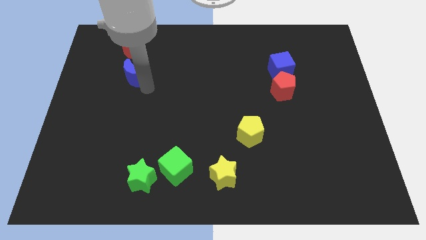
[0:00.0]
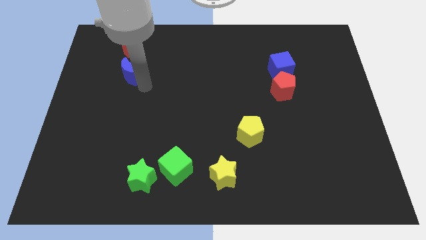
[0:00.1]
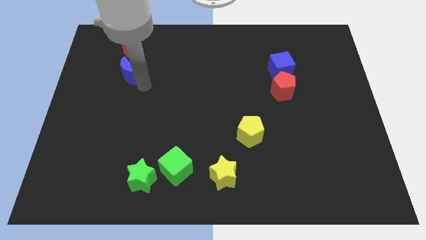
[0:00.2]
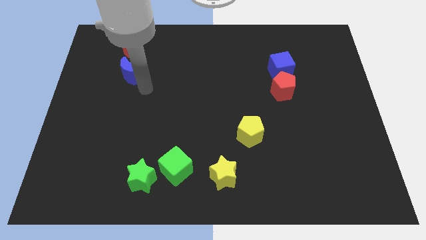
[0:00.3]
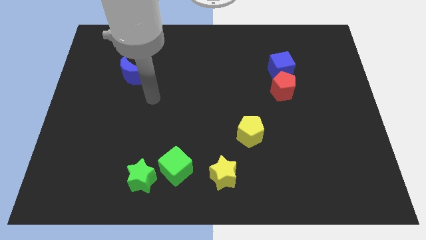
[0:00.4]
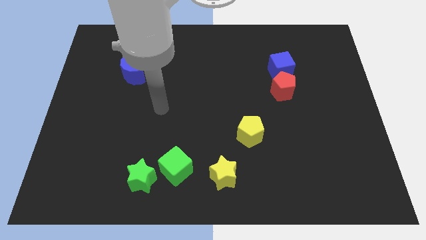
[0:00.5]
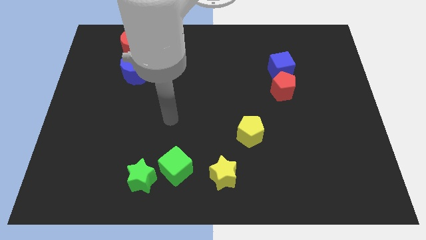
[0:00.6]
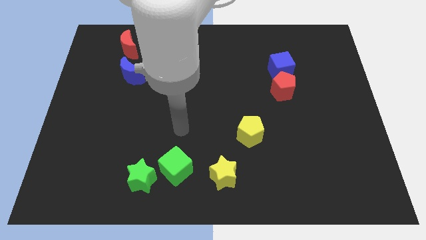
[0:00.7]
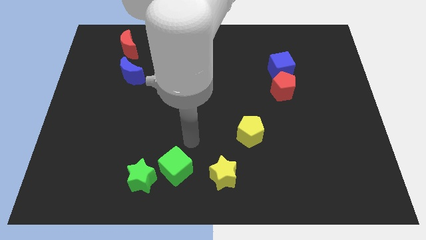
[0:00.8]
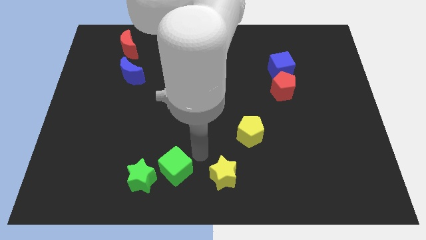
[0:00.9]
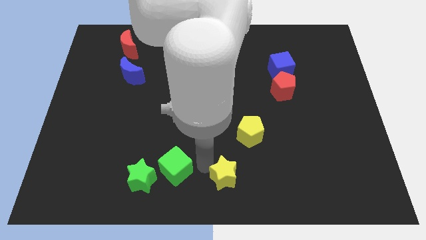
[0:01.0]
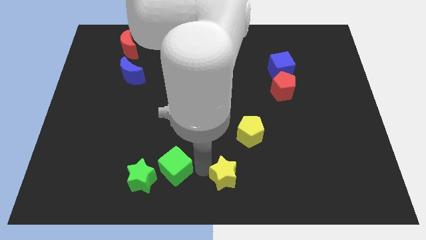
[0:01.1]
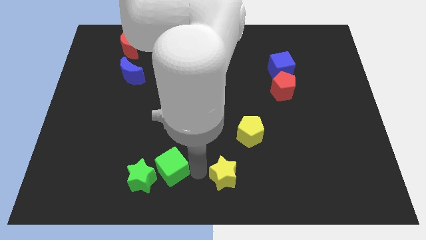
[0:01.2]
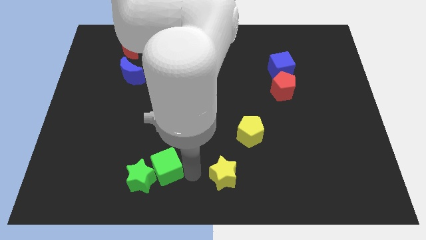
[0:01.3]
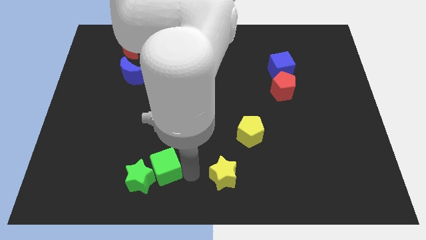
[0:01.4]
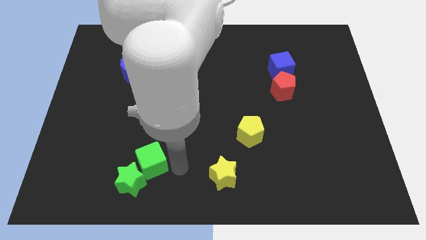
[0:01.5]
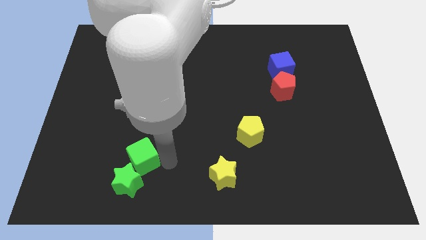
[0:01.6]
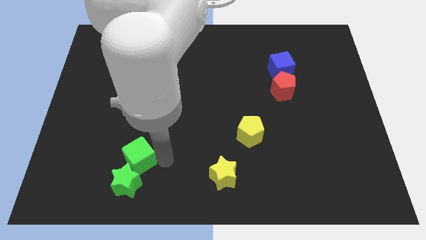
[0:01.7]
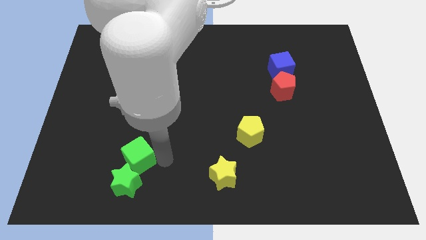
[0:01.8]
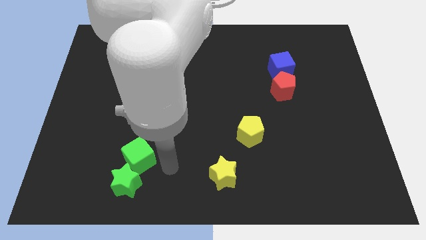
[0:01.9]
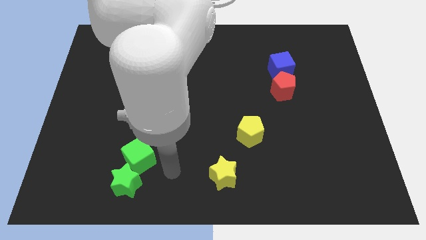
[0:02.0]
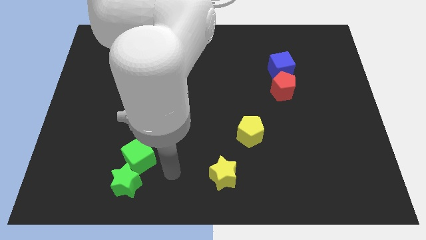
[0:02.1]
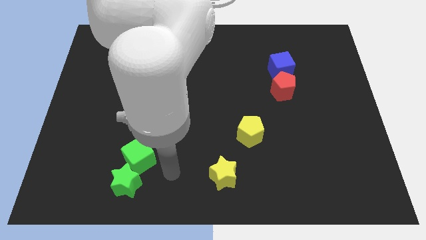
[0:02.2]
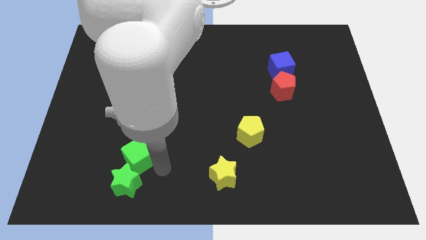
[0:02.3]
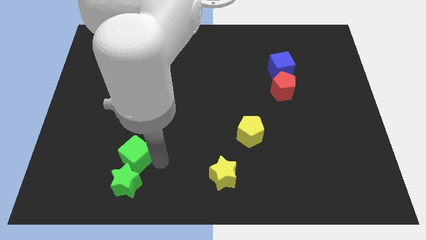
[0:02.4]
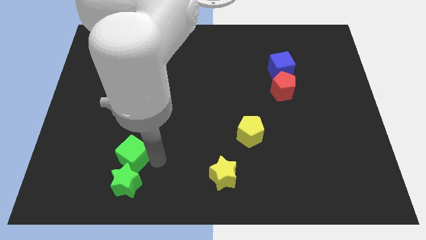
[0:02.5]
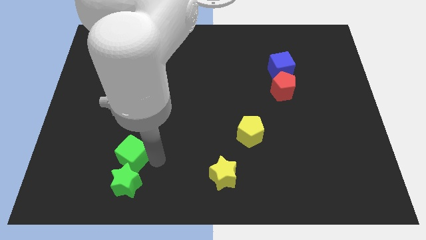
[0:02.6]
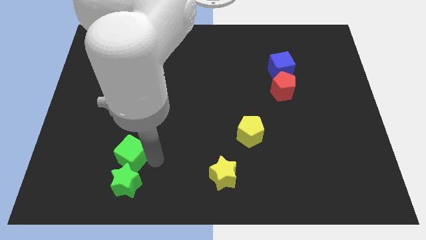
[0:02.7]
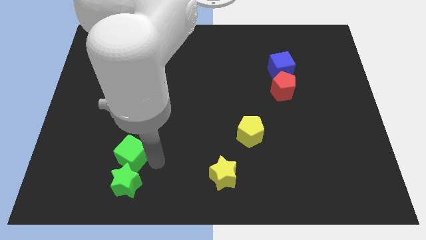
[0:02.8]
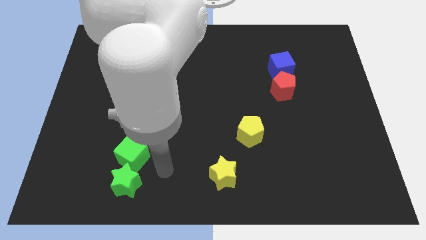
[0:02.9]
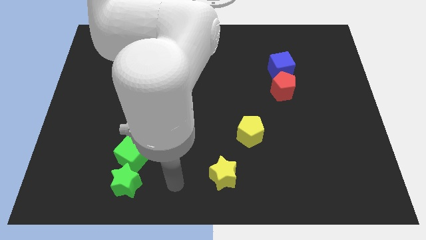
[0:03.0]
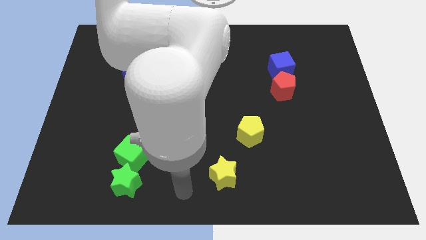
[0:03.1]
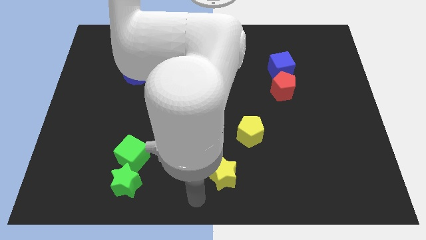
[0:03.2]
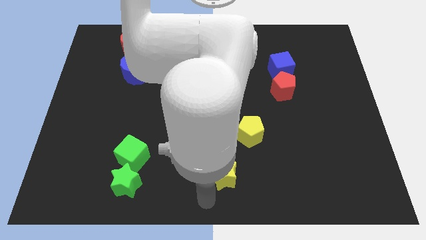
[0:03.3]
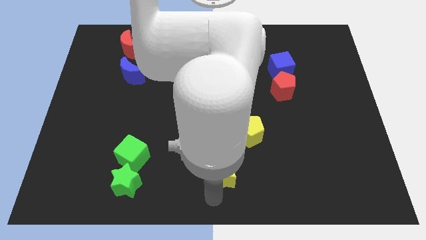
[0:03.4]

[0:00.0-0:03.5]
move the green star and green cube to the left

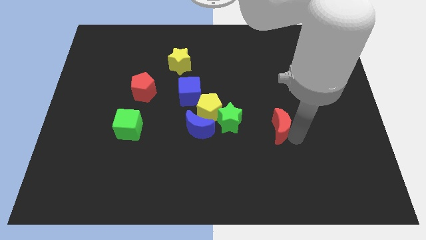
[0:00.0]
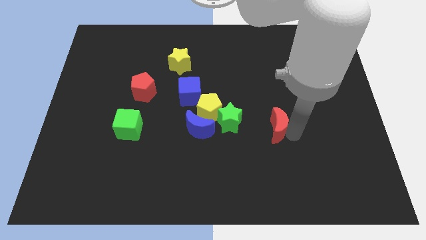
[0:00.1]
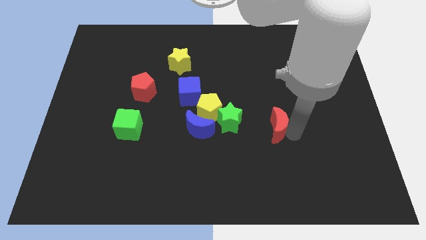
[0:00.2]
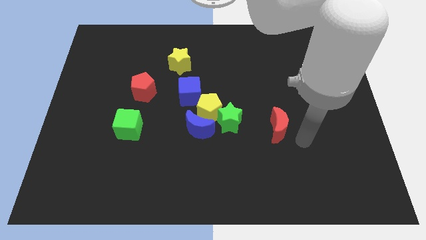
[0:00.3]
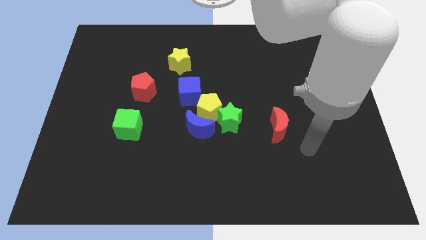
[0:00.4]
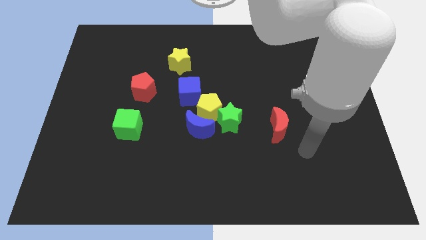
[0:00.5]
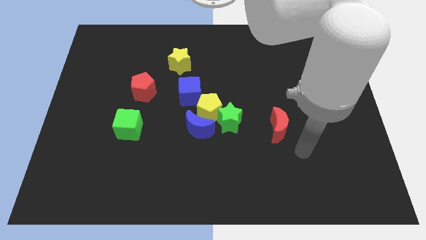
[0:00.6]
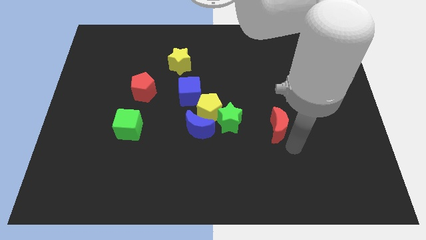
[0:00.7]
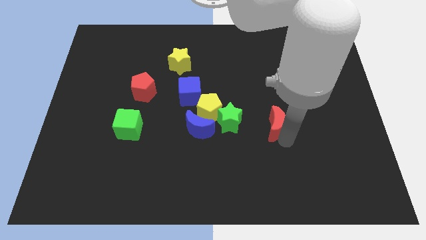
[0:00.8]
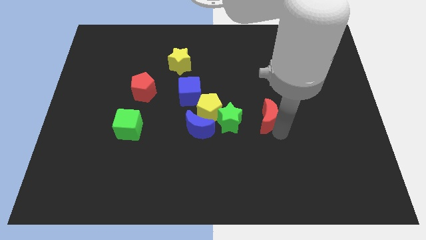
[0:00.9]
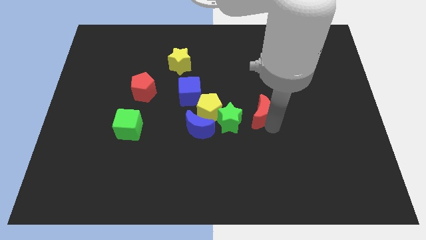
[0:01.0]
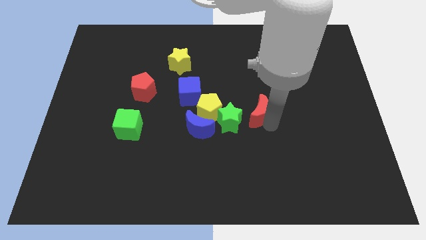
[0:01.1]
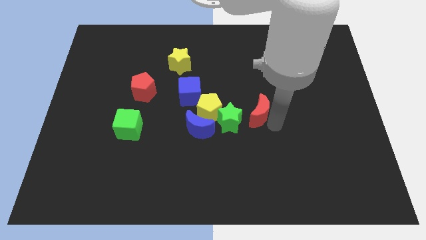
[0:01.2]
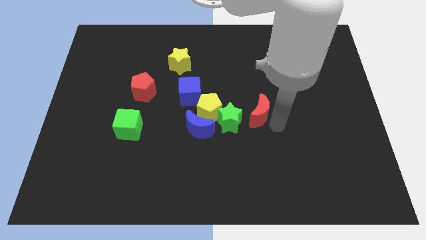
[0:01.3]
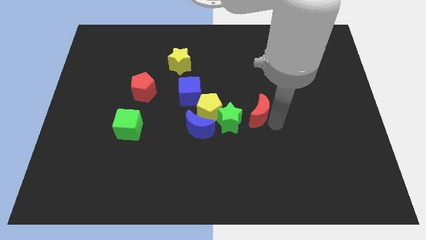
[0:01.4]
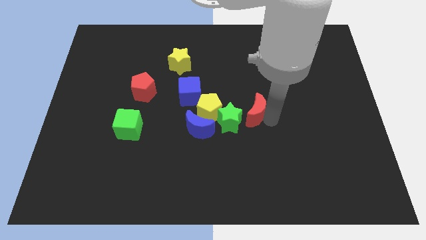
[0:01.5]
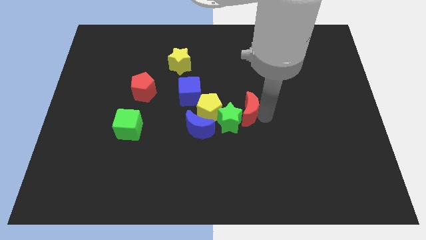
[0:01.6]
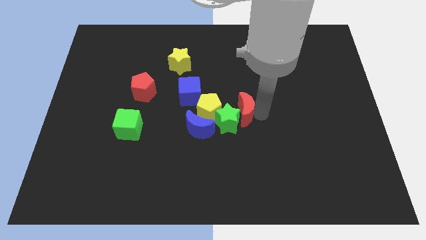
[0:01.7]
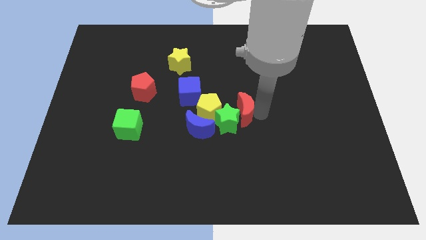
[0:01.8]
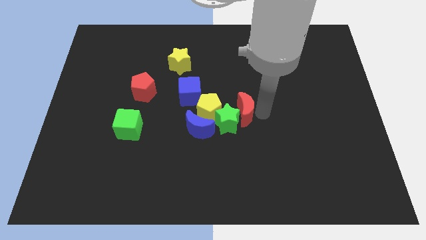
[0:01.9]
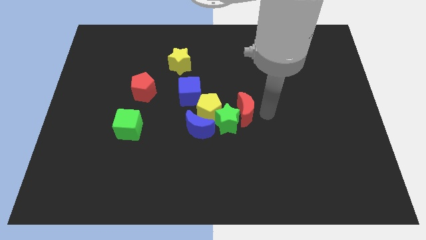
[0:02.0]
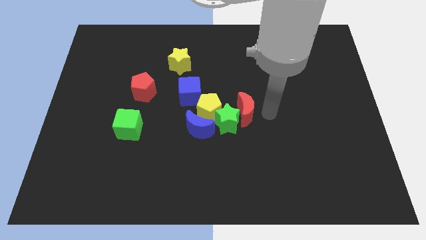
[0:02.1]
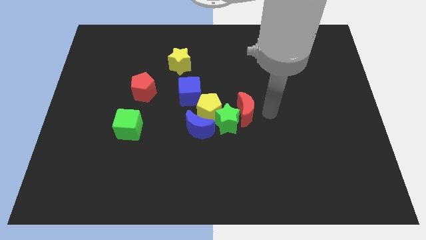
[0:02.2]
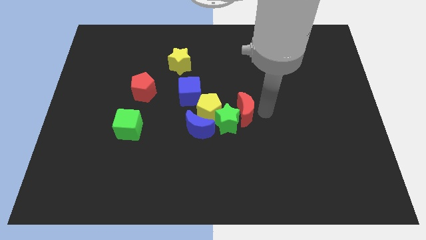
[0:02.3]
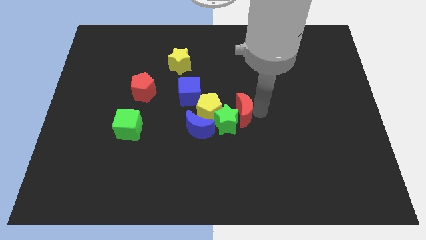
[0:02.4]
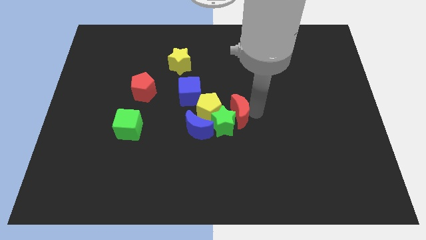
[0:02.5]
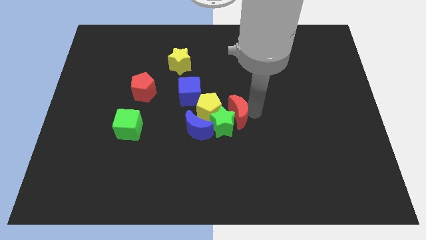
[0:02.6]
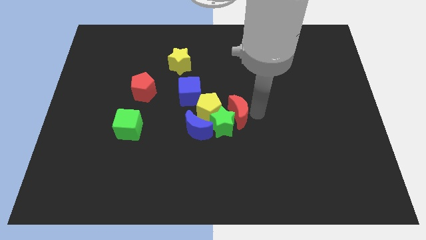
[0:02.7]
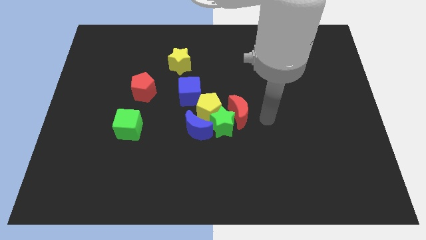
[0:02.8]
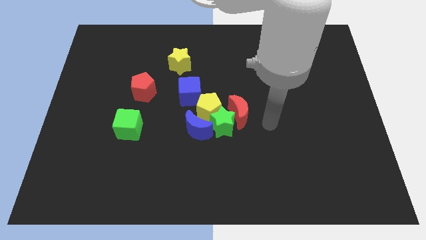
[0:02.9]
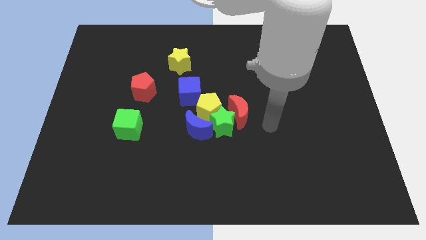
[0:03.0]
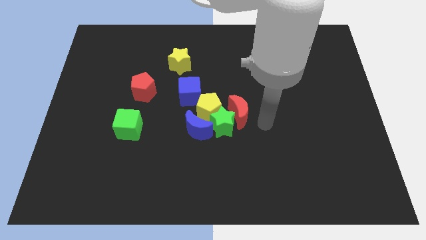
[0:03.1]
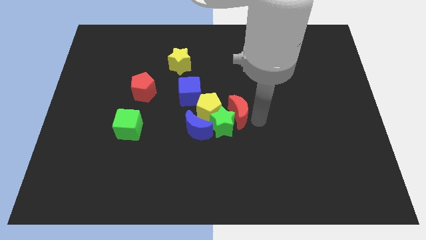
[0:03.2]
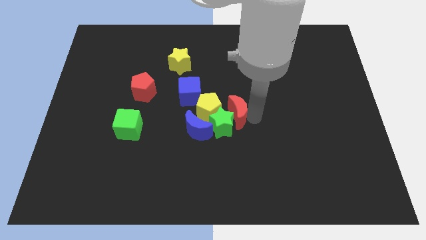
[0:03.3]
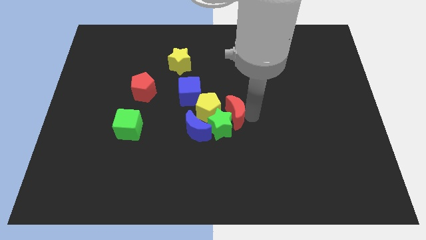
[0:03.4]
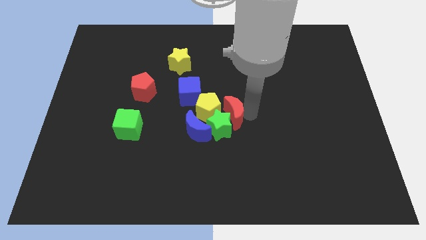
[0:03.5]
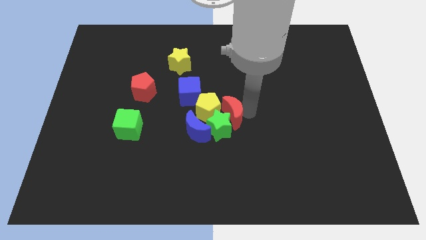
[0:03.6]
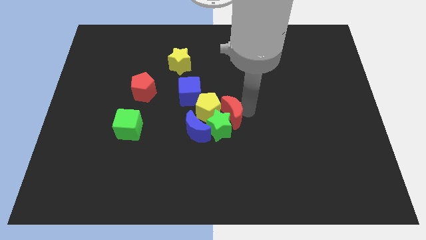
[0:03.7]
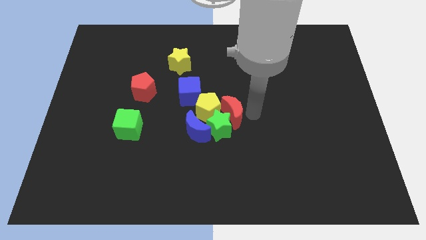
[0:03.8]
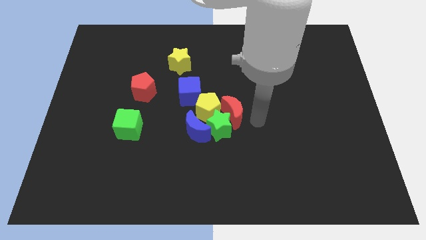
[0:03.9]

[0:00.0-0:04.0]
add the red crescent to the group of blocks at the center of the board

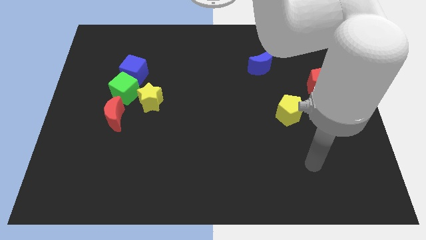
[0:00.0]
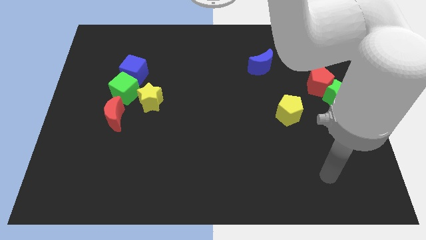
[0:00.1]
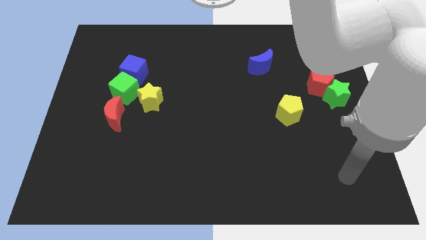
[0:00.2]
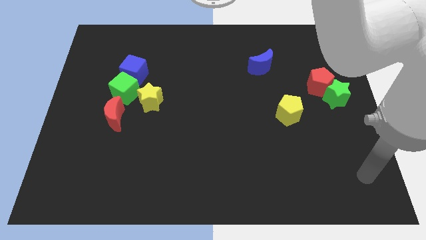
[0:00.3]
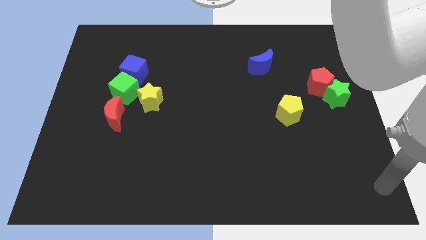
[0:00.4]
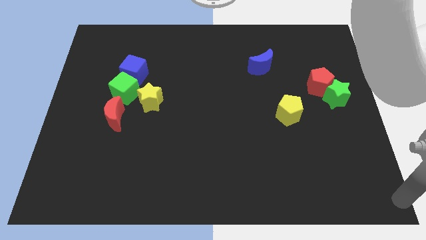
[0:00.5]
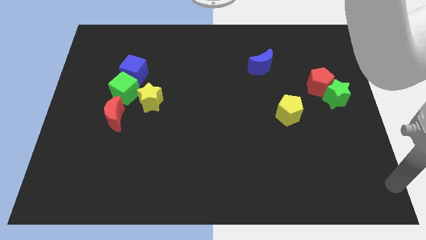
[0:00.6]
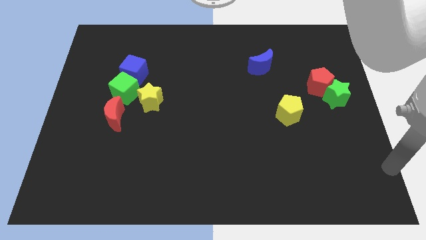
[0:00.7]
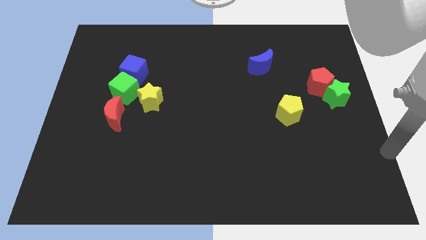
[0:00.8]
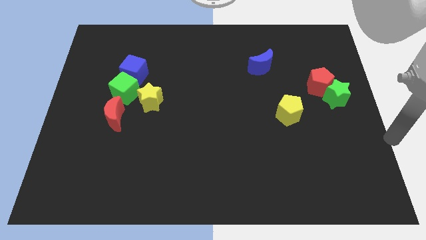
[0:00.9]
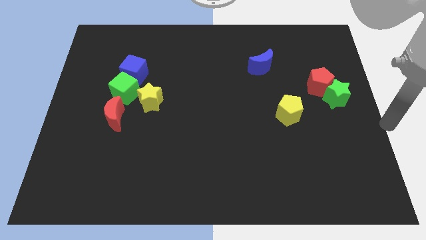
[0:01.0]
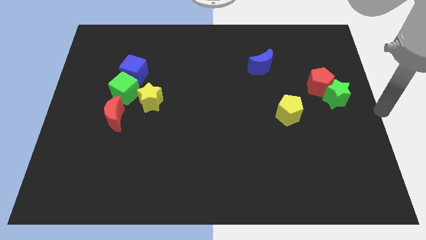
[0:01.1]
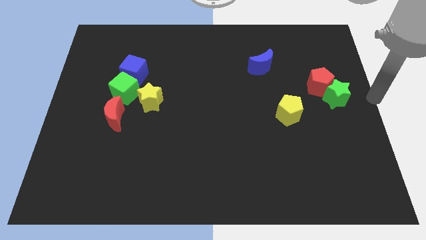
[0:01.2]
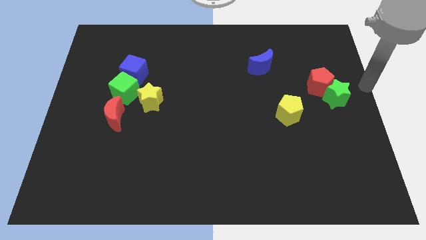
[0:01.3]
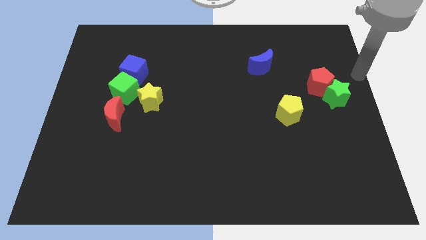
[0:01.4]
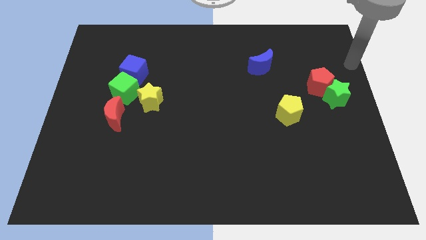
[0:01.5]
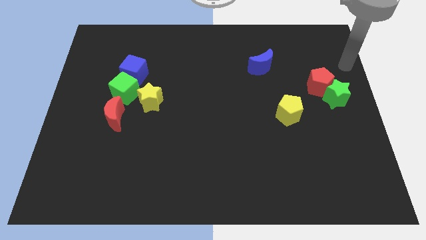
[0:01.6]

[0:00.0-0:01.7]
place your arm to the top right center of the board
